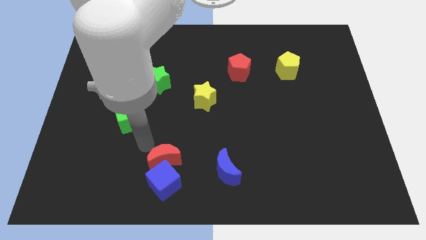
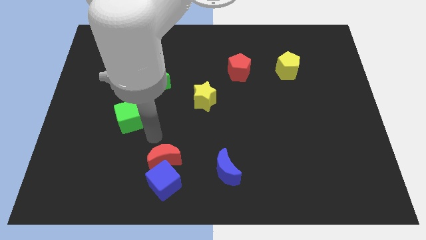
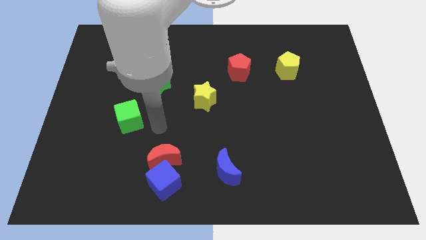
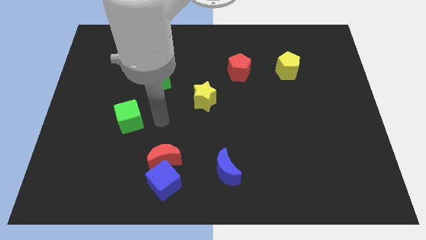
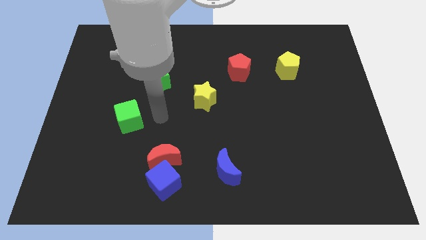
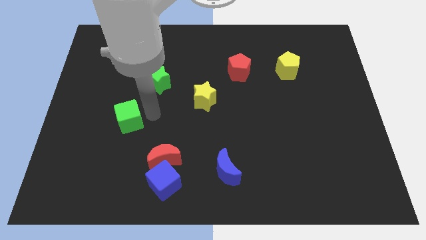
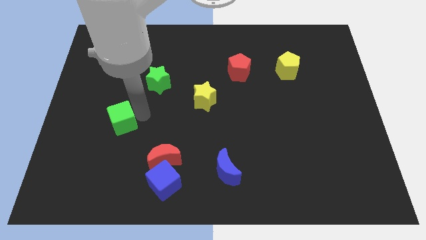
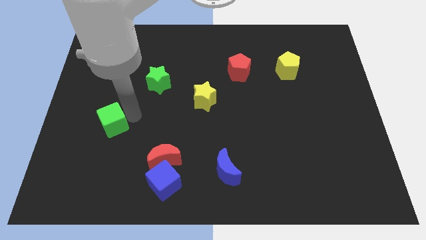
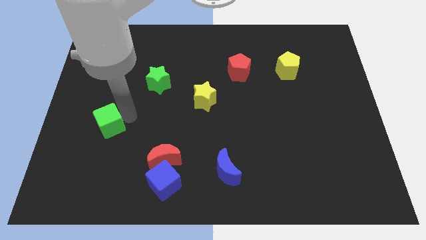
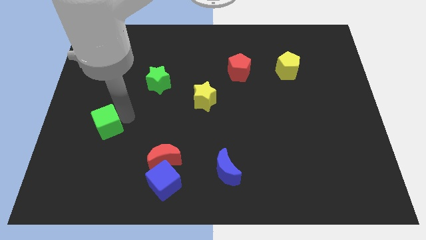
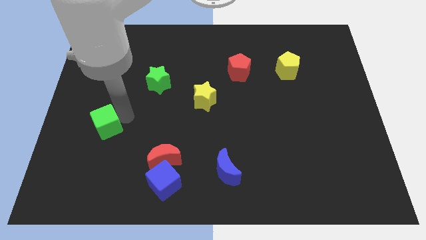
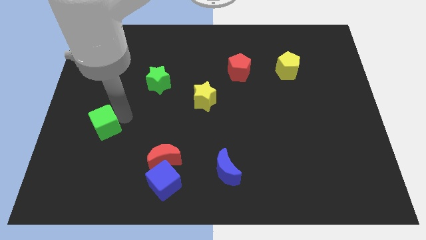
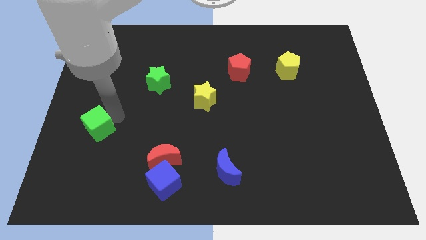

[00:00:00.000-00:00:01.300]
push the green cube towards the left side of the board

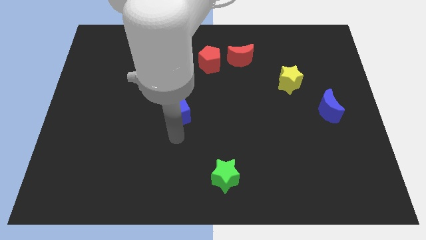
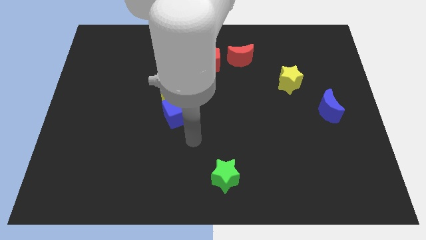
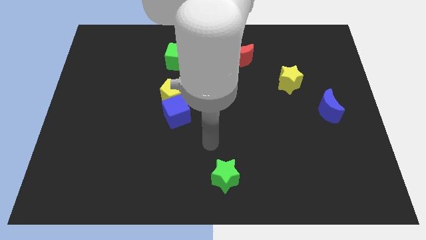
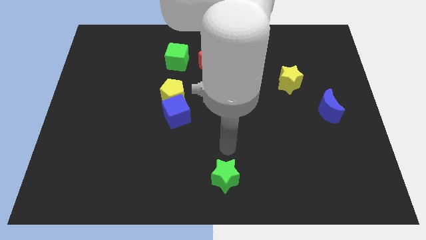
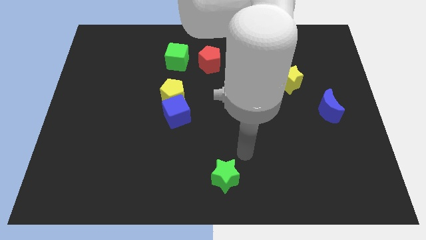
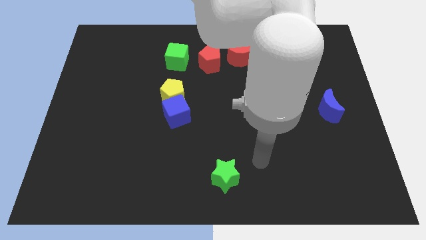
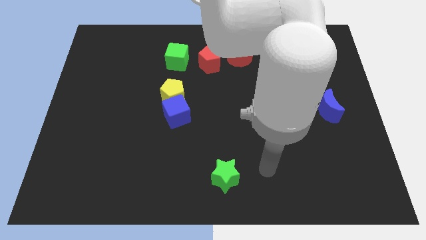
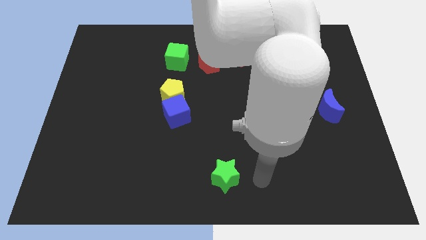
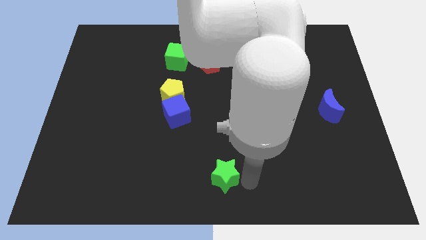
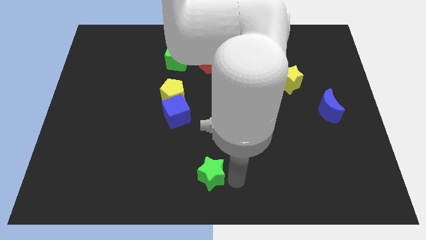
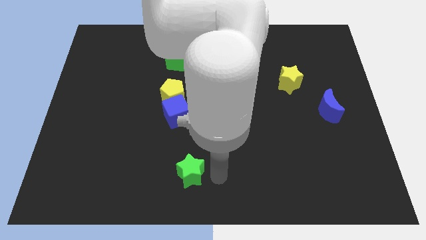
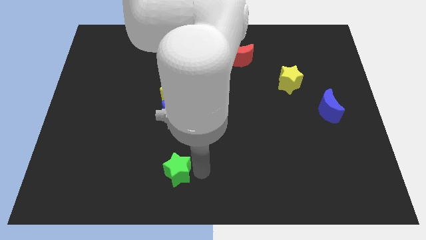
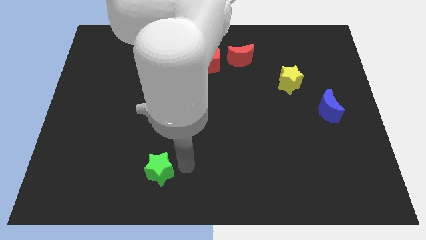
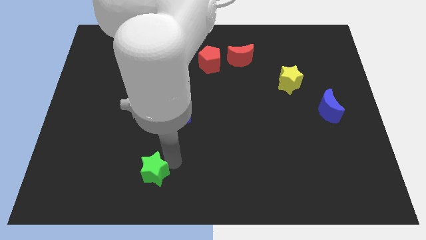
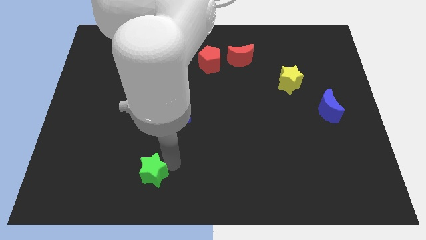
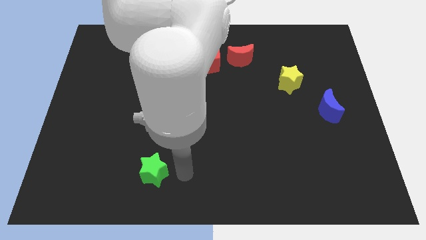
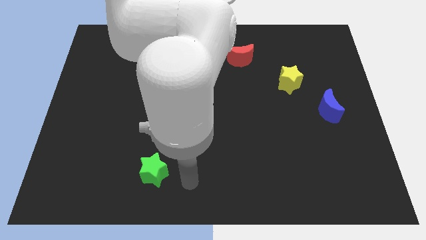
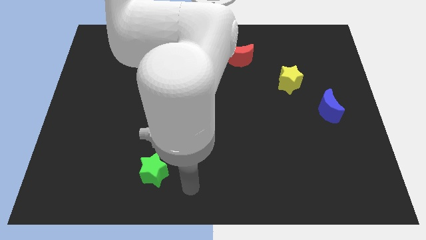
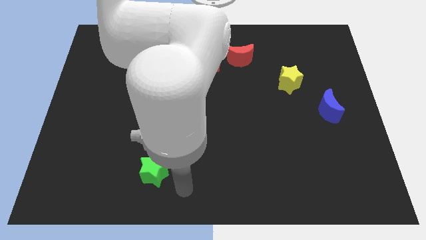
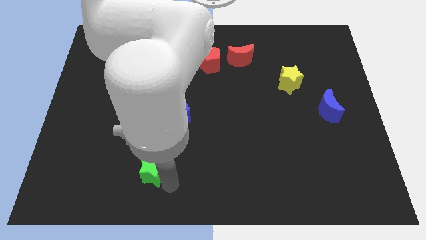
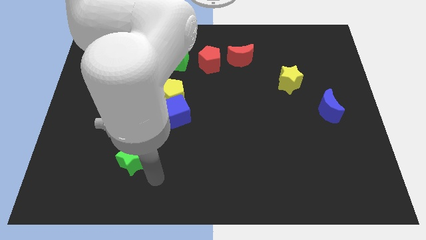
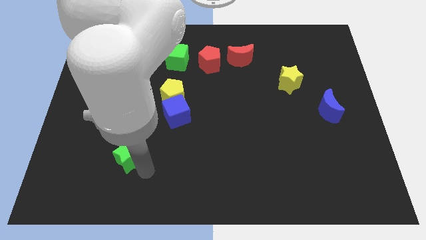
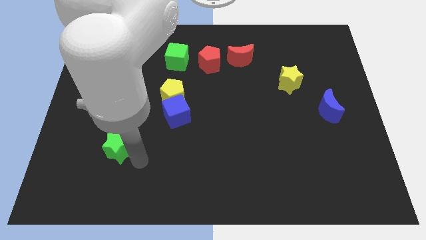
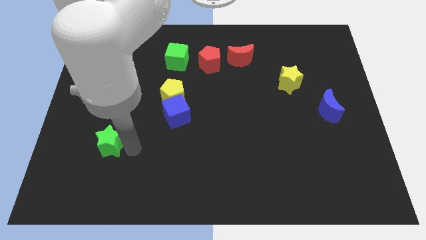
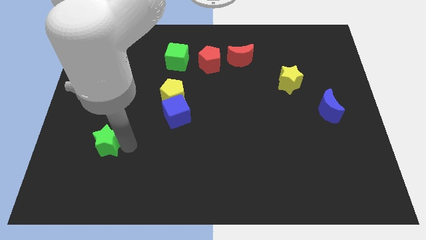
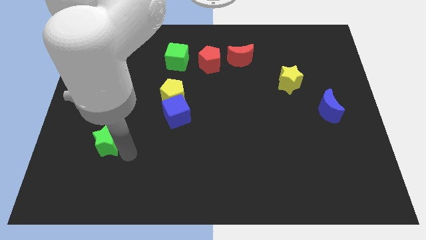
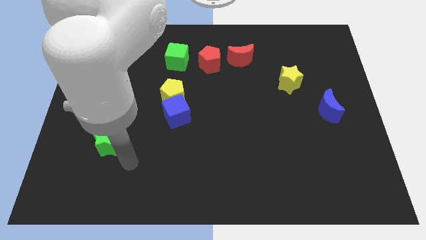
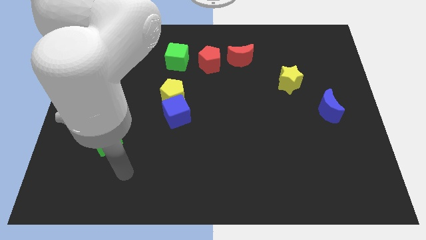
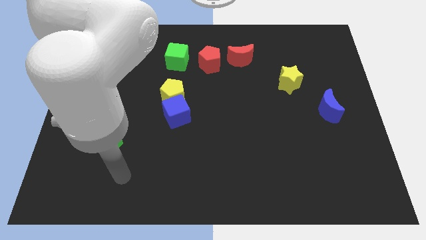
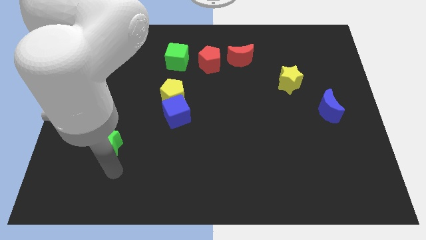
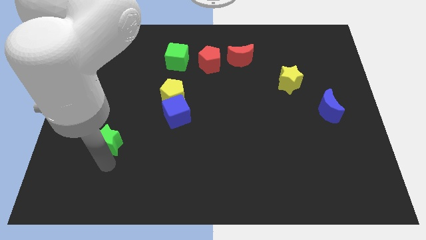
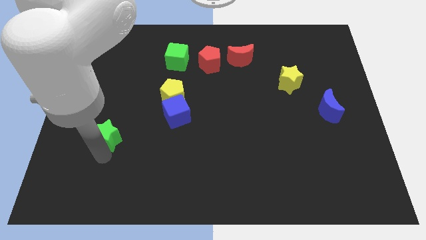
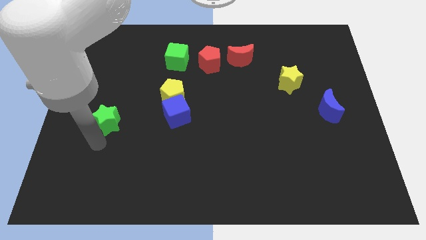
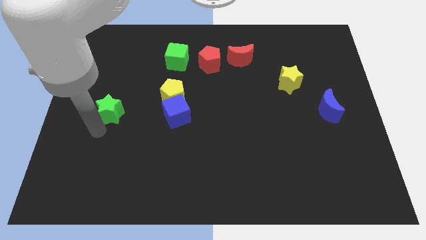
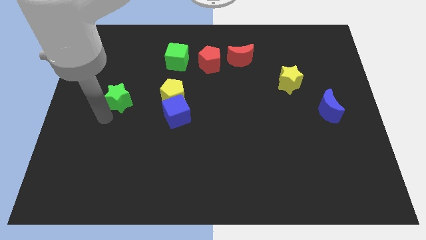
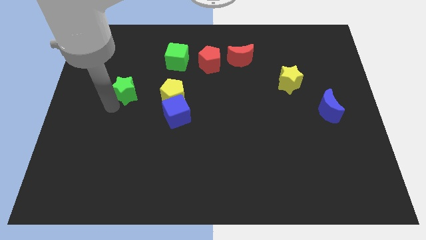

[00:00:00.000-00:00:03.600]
place the green star to the left of the yellow pentagon

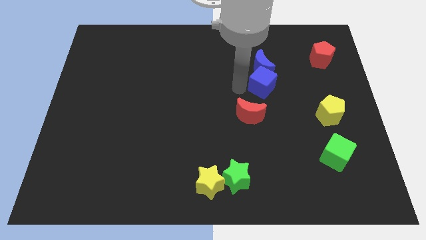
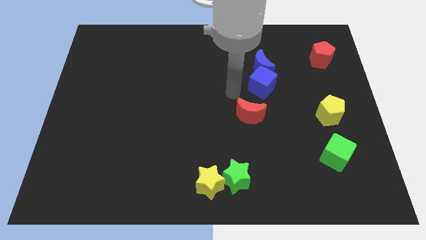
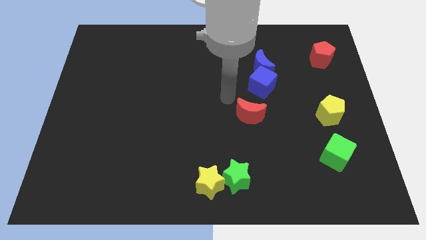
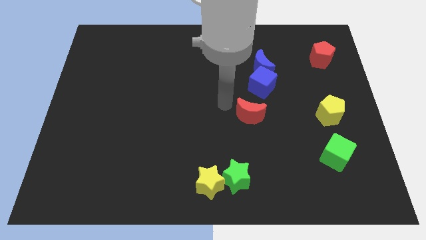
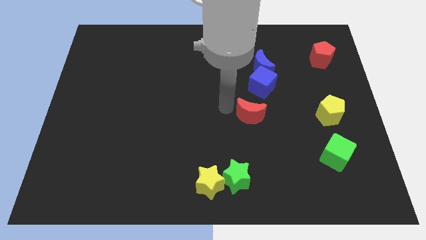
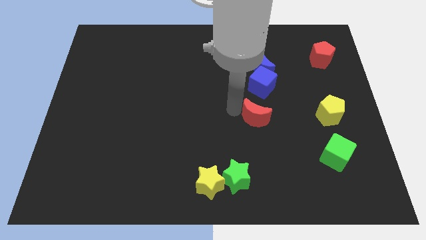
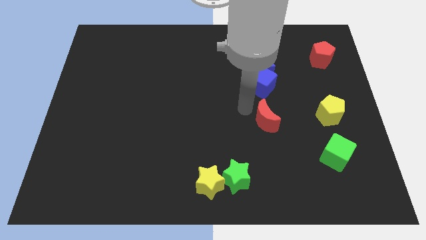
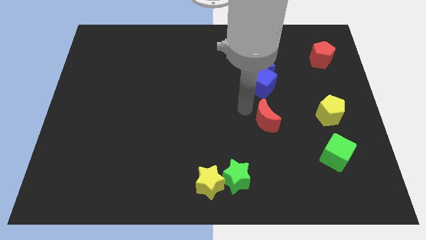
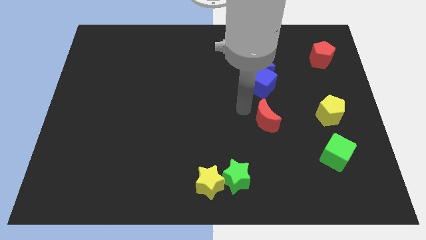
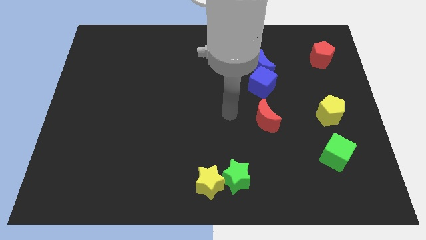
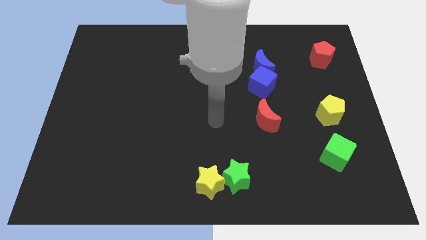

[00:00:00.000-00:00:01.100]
put the red moon below the blue cube

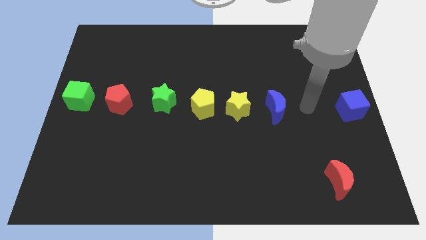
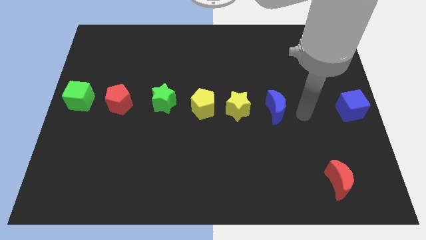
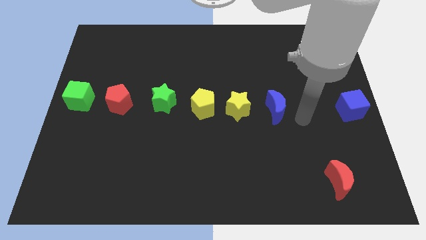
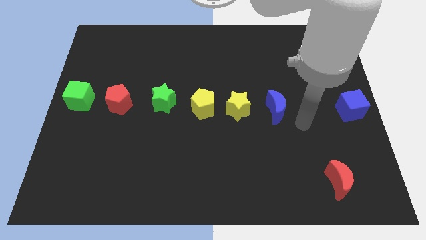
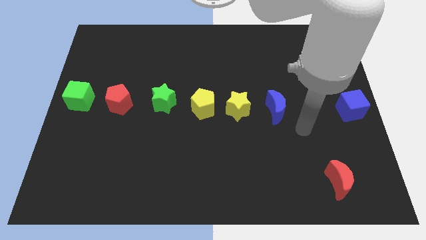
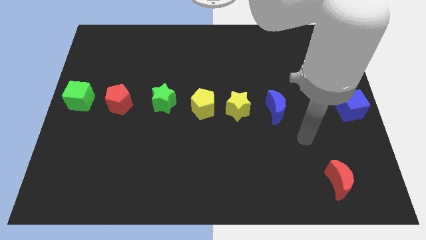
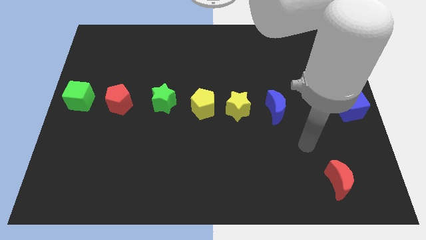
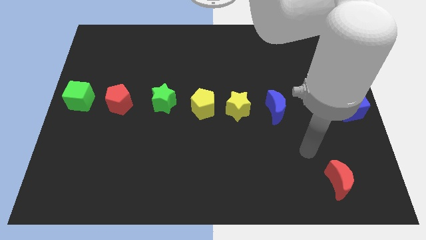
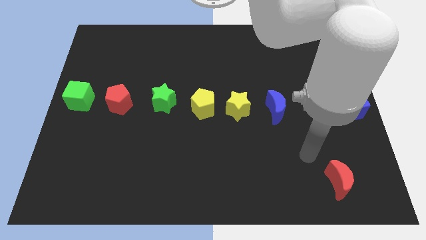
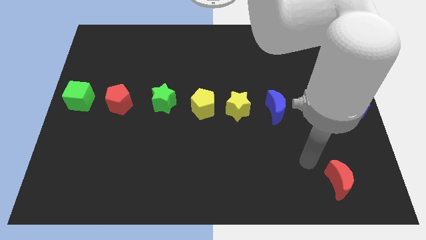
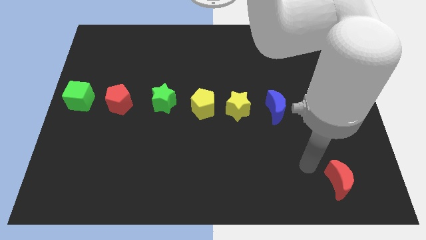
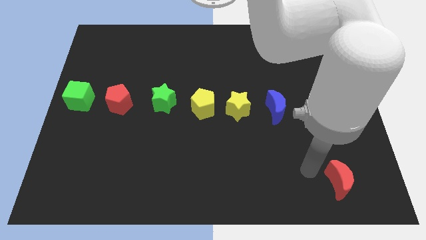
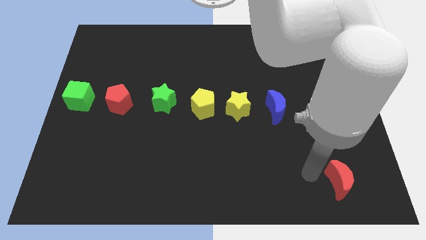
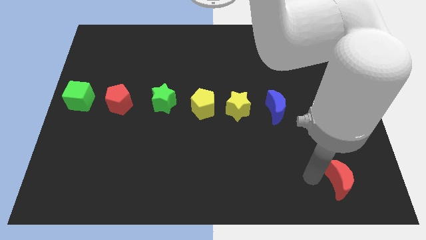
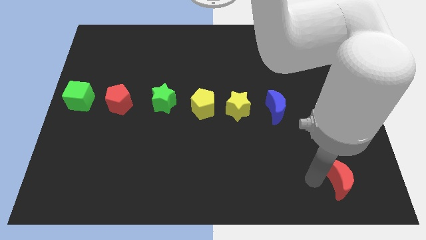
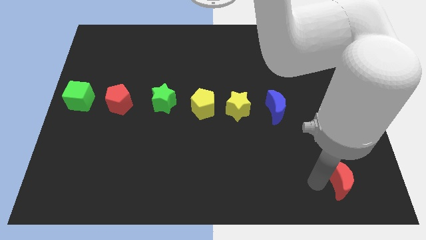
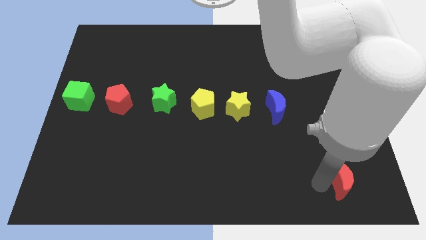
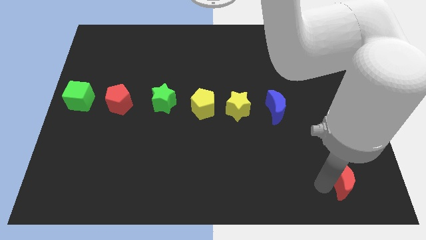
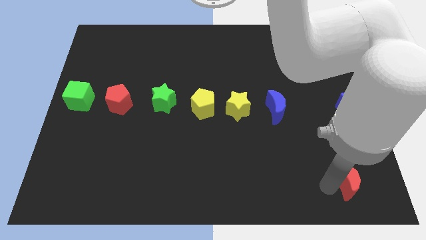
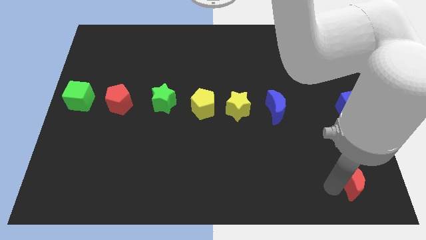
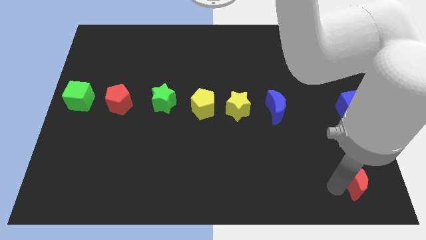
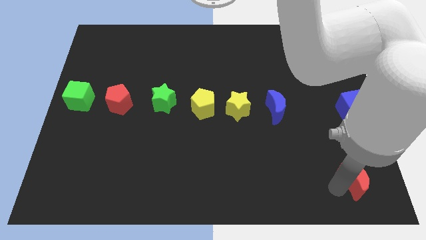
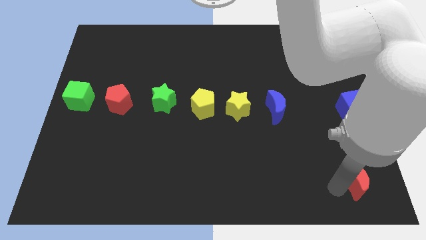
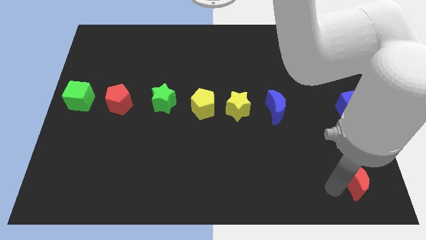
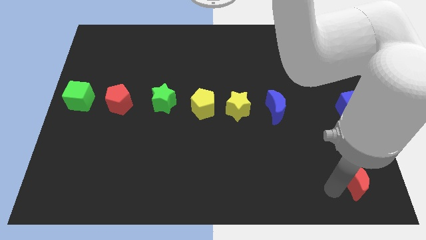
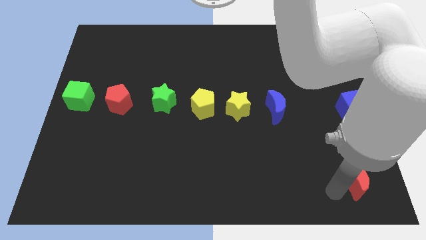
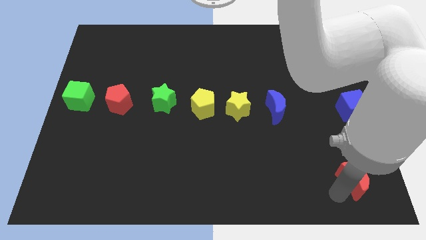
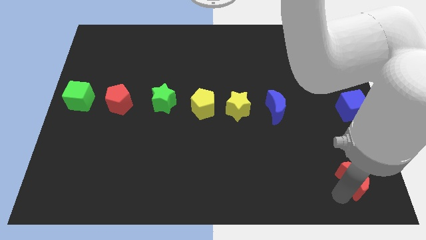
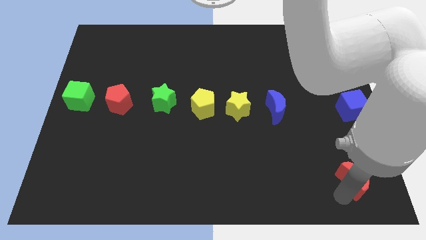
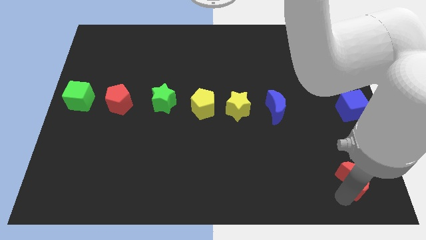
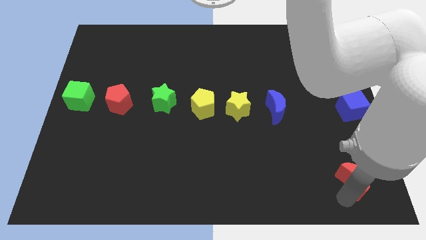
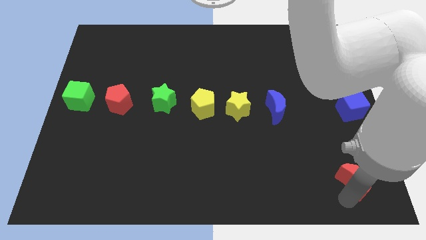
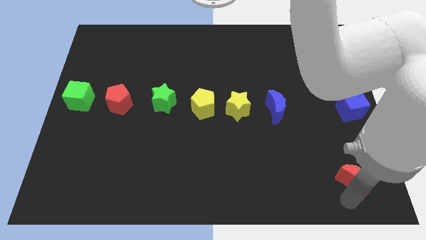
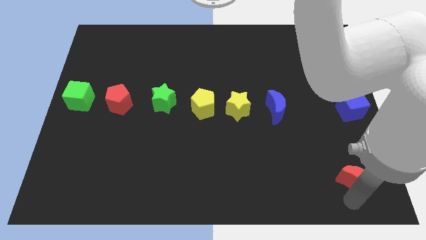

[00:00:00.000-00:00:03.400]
point your arm below red moon
